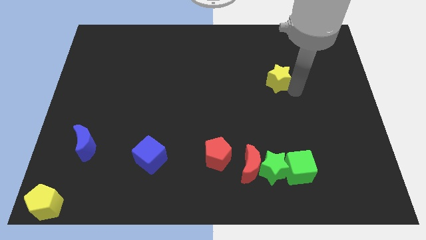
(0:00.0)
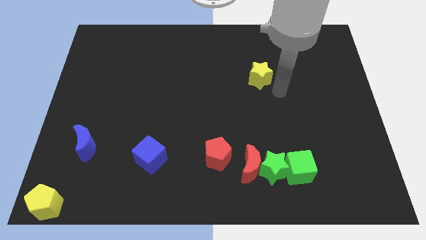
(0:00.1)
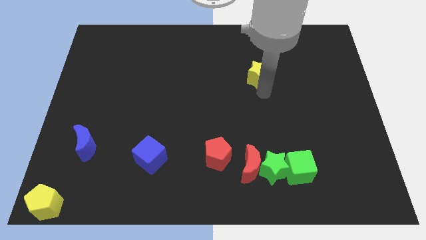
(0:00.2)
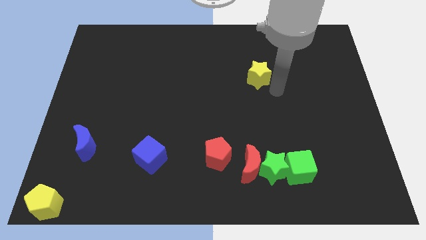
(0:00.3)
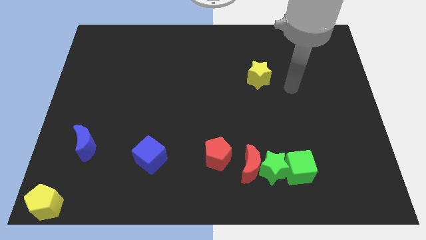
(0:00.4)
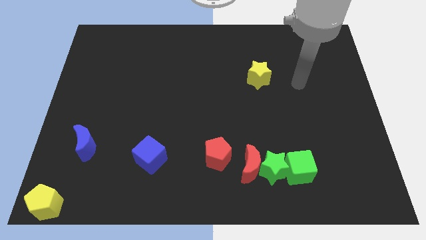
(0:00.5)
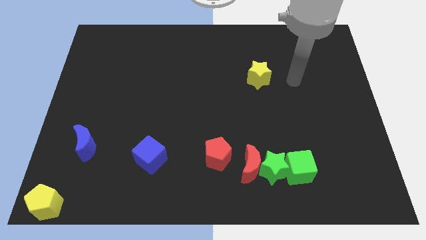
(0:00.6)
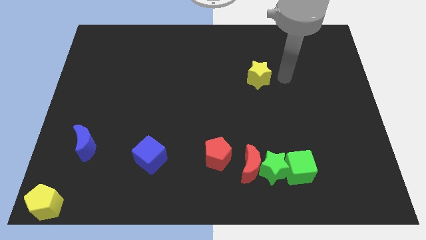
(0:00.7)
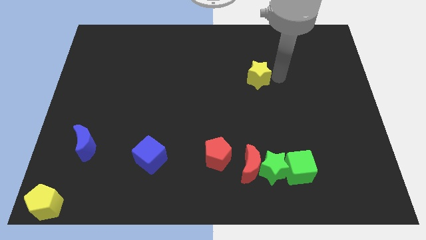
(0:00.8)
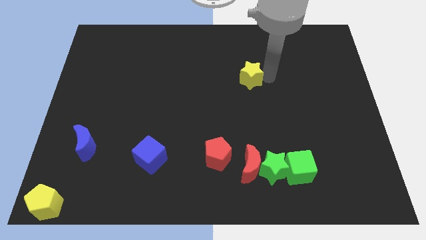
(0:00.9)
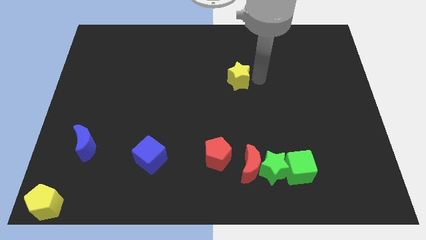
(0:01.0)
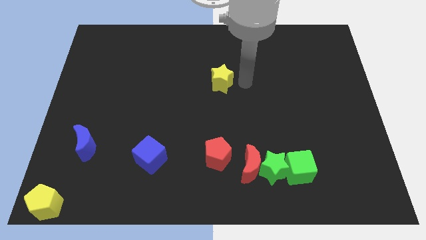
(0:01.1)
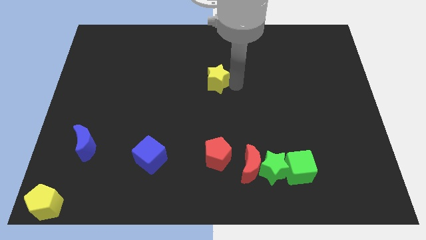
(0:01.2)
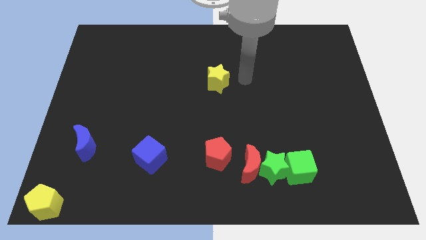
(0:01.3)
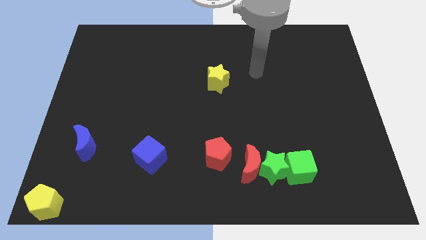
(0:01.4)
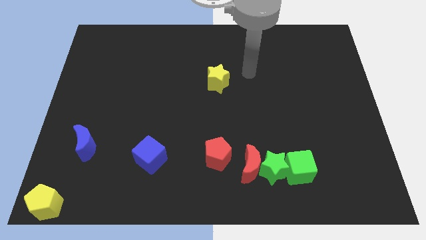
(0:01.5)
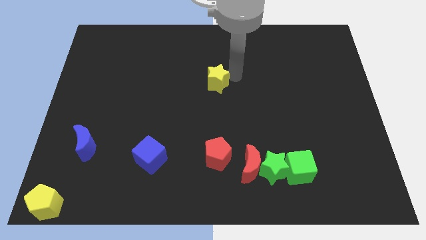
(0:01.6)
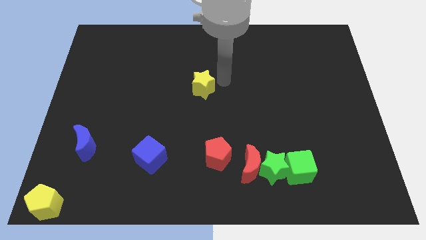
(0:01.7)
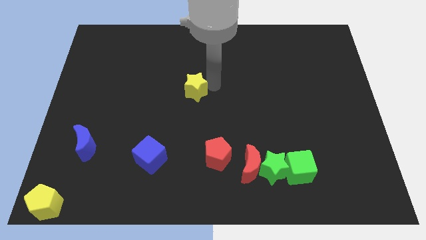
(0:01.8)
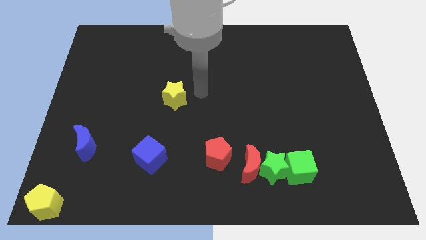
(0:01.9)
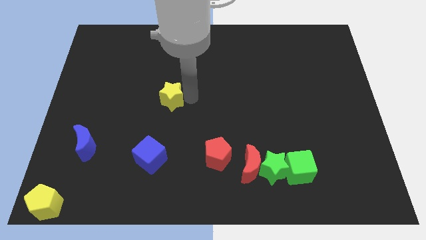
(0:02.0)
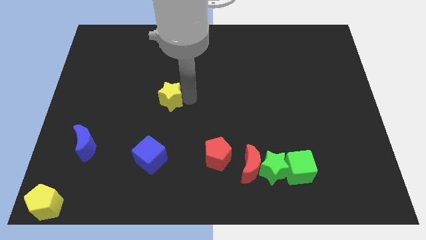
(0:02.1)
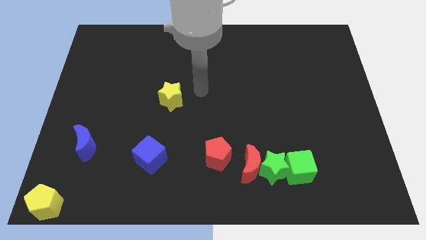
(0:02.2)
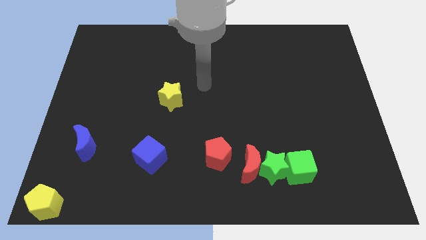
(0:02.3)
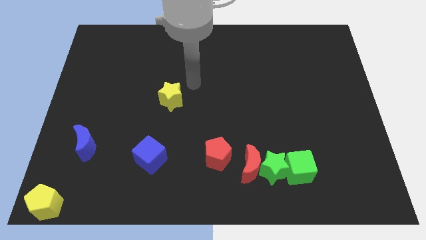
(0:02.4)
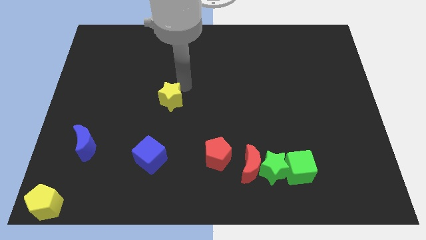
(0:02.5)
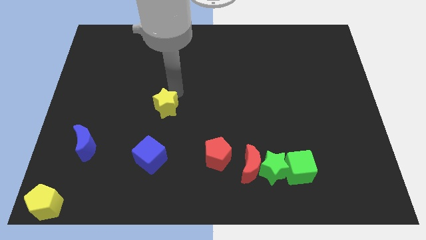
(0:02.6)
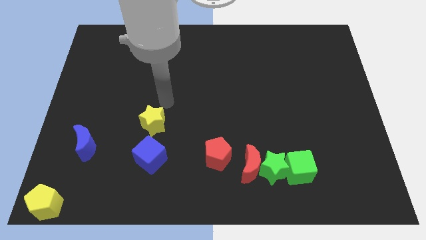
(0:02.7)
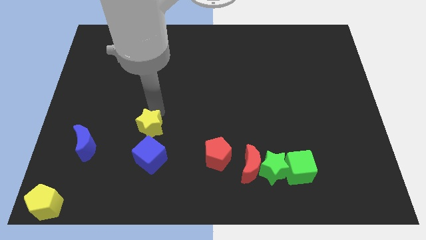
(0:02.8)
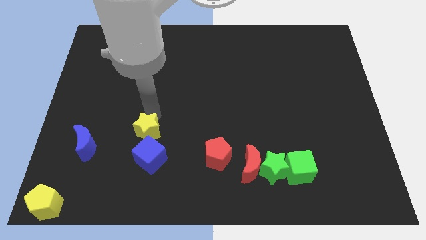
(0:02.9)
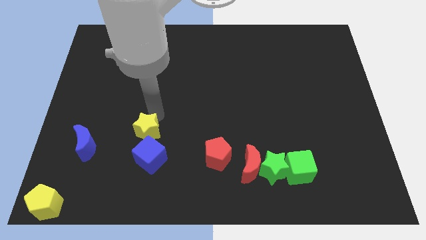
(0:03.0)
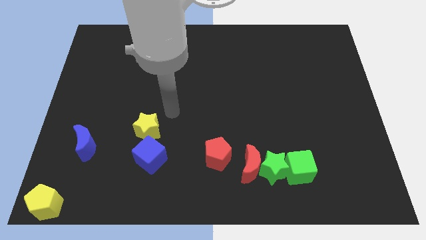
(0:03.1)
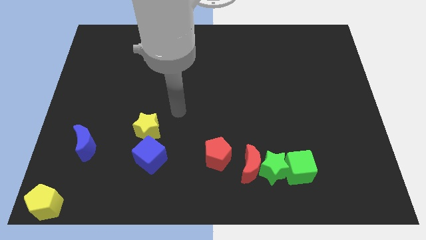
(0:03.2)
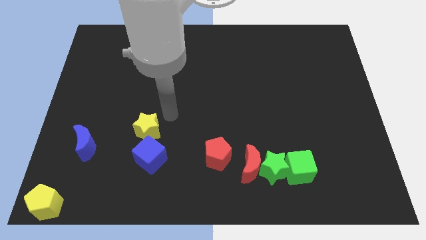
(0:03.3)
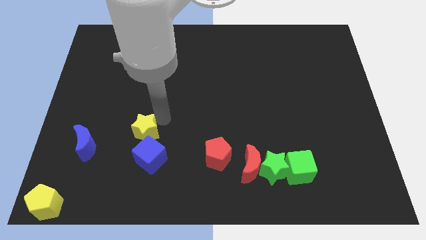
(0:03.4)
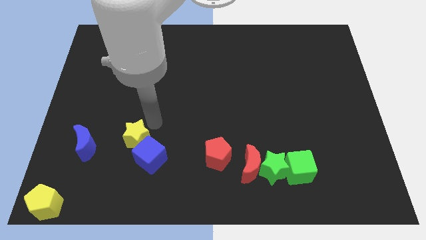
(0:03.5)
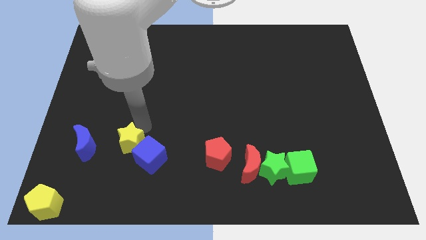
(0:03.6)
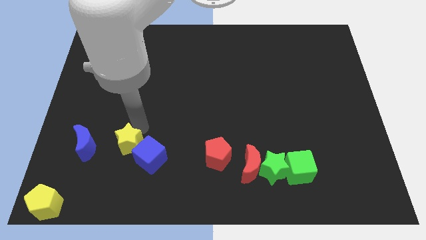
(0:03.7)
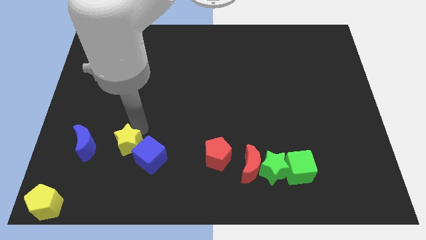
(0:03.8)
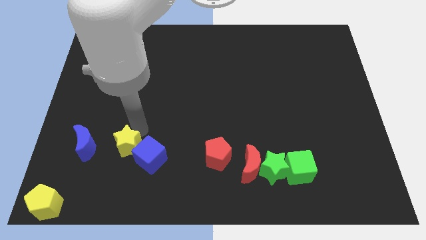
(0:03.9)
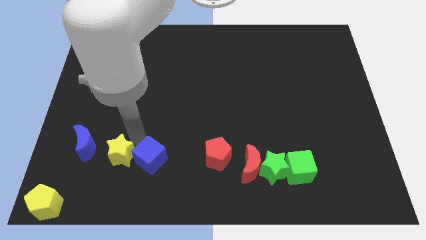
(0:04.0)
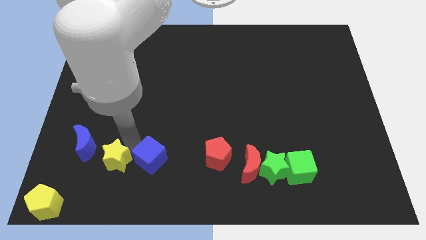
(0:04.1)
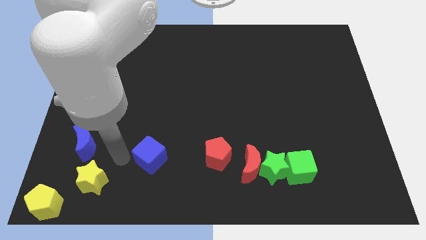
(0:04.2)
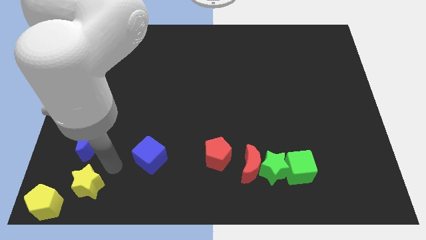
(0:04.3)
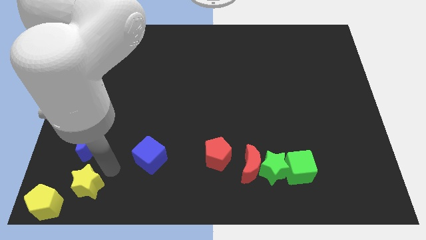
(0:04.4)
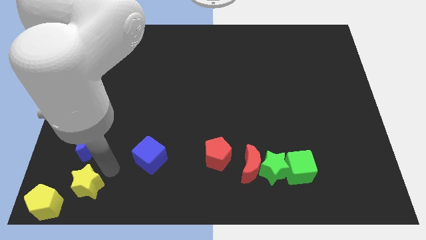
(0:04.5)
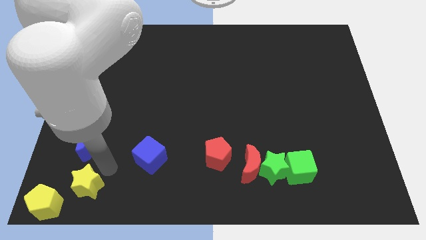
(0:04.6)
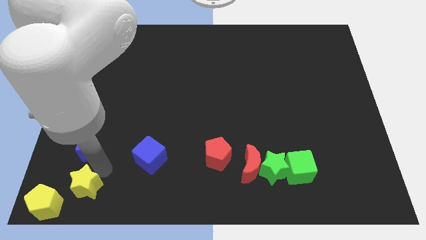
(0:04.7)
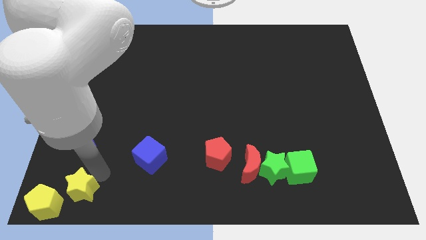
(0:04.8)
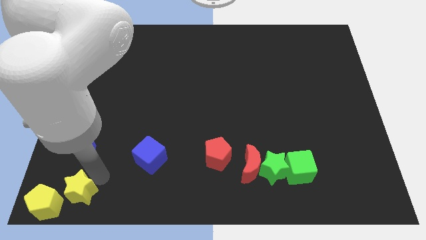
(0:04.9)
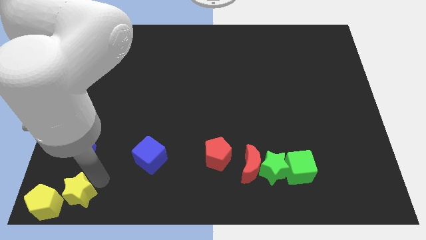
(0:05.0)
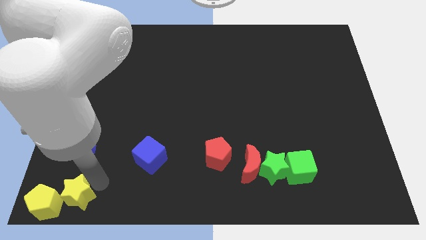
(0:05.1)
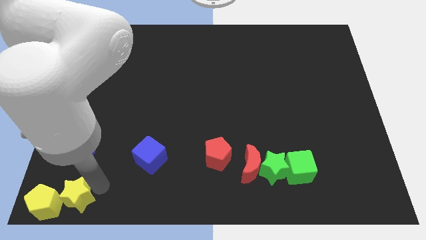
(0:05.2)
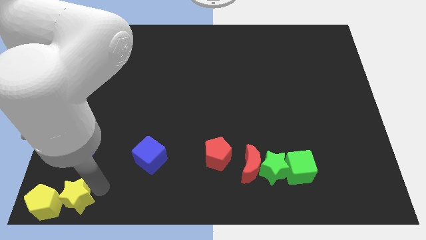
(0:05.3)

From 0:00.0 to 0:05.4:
put the yellow star below the blue crescent

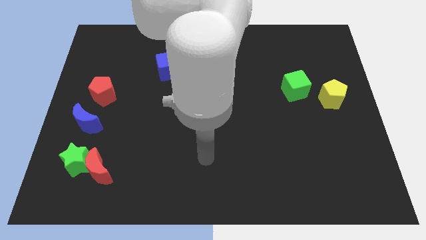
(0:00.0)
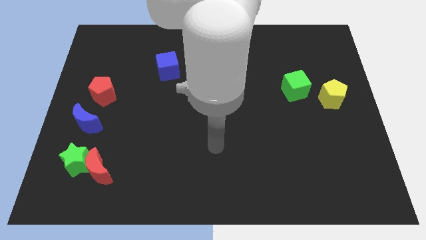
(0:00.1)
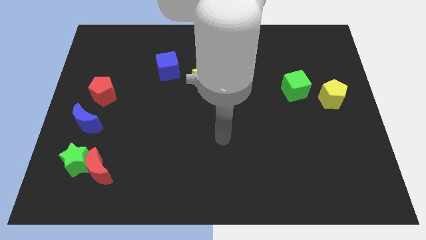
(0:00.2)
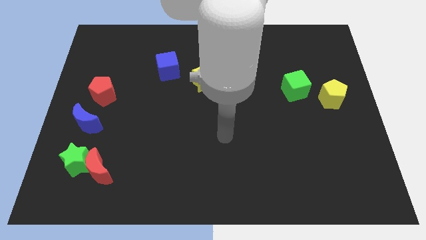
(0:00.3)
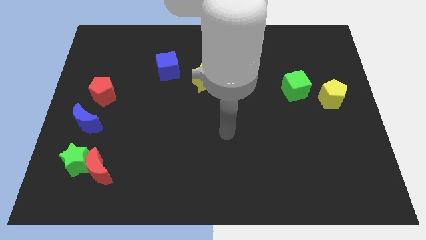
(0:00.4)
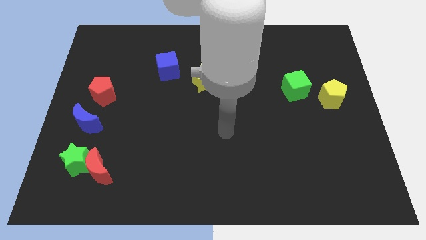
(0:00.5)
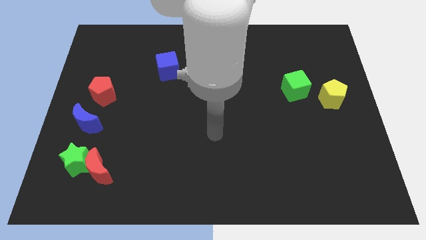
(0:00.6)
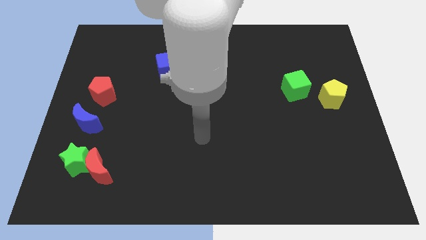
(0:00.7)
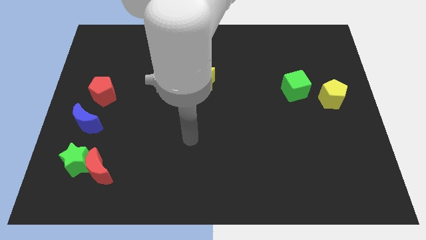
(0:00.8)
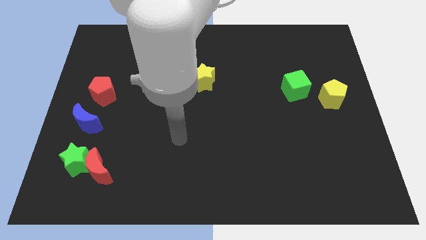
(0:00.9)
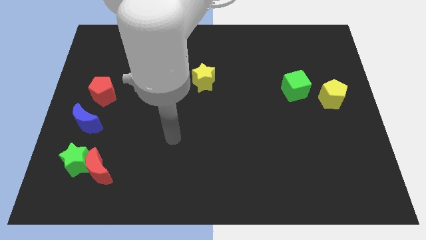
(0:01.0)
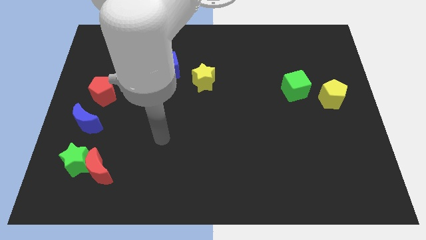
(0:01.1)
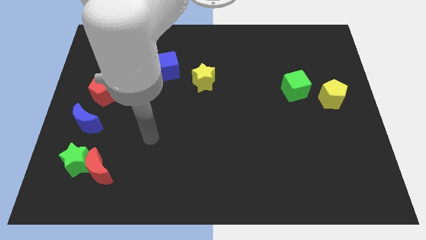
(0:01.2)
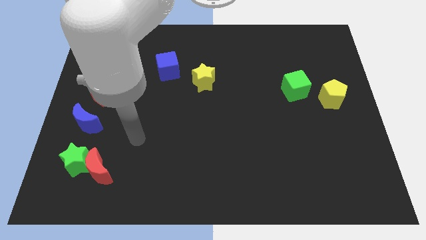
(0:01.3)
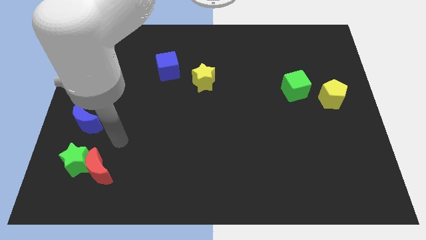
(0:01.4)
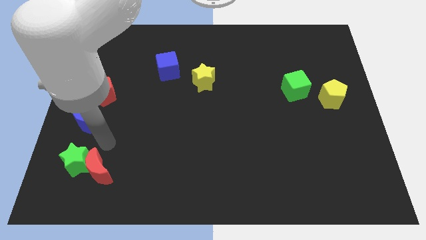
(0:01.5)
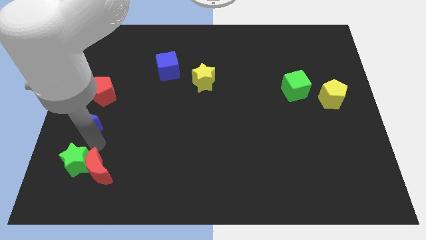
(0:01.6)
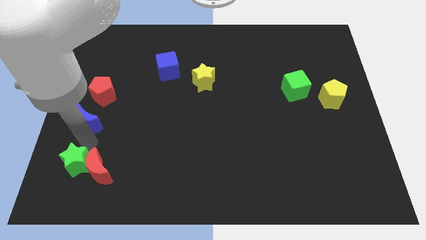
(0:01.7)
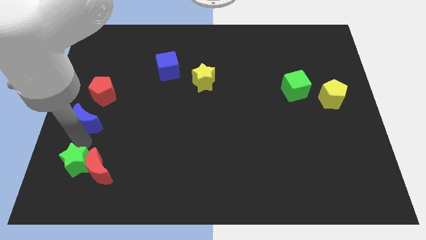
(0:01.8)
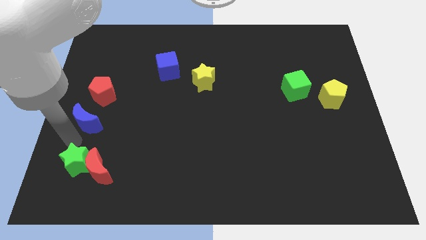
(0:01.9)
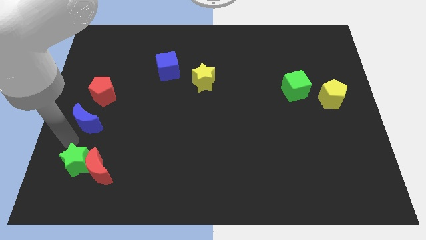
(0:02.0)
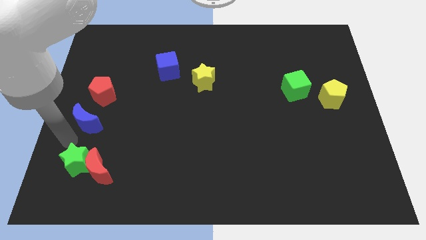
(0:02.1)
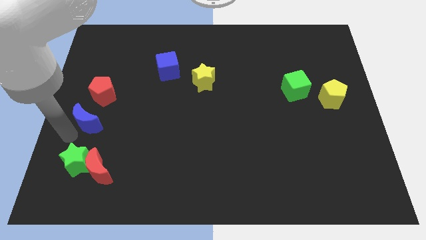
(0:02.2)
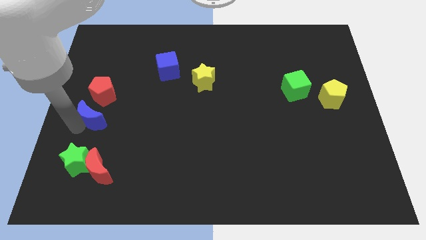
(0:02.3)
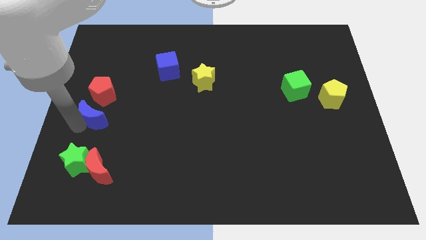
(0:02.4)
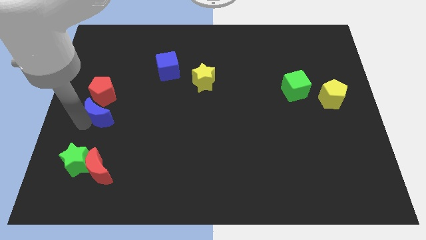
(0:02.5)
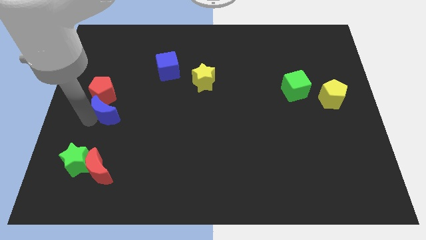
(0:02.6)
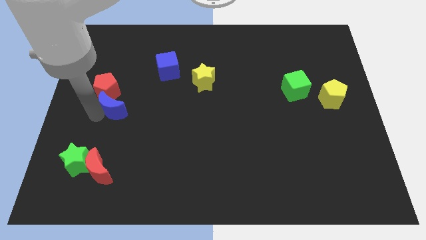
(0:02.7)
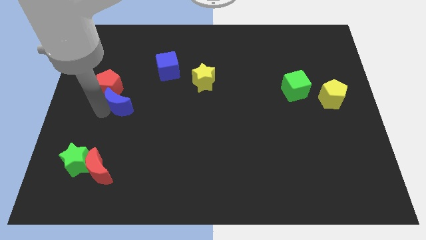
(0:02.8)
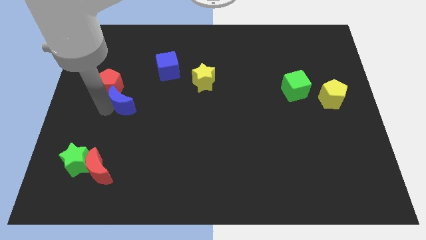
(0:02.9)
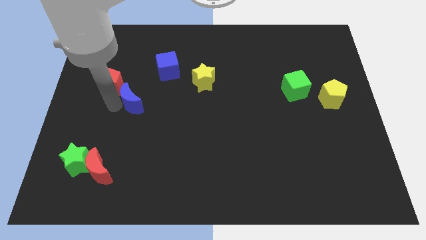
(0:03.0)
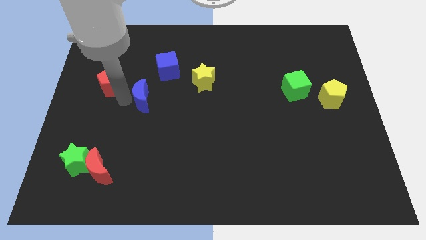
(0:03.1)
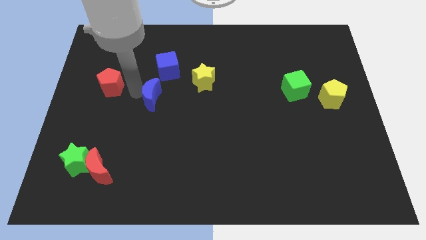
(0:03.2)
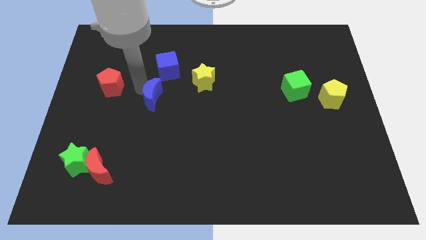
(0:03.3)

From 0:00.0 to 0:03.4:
move the blue moon to the right of the red pentagon

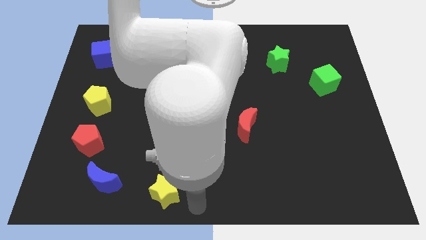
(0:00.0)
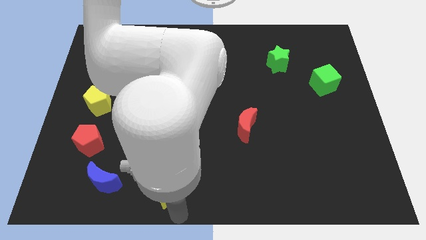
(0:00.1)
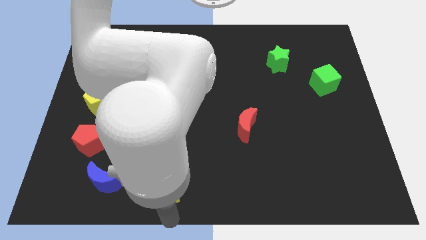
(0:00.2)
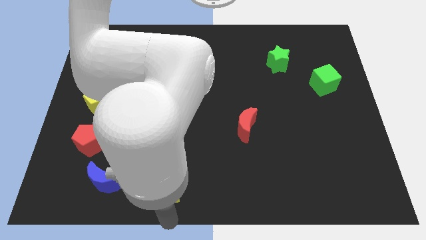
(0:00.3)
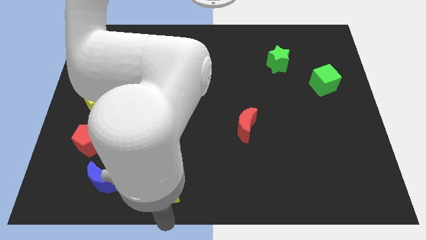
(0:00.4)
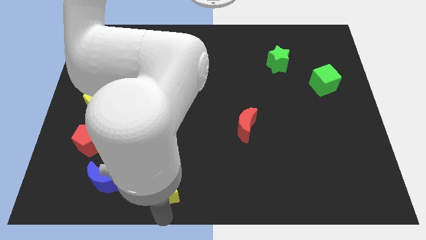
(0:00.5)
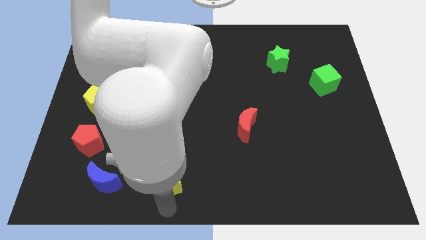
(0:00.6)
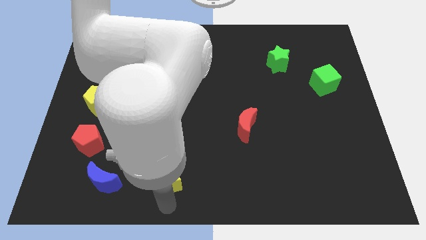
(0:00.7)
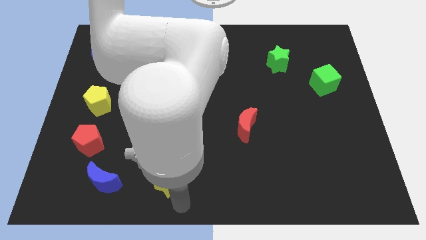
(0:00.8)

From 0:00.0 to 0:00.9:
place yellow star to the adjacent of blue moon
